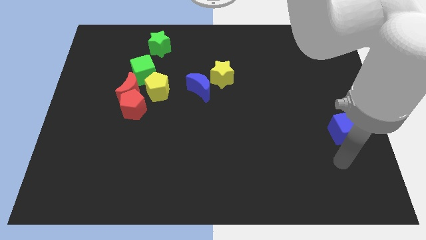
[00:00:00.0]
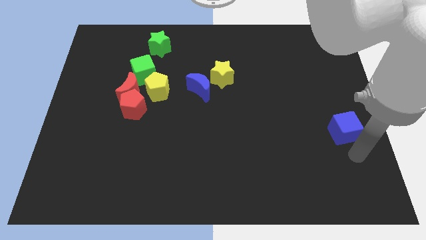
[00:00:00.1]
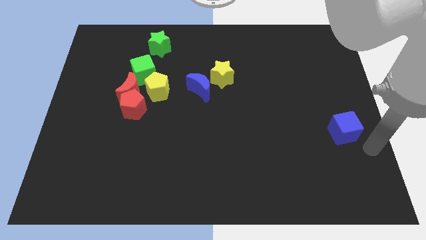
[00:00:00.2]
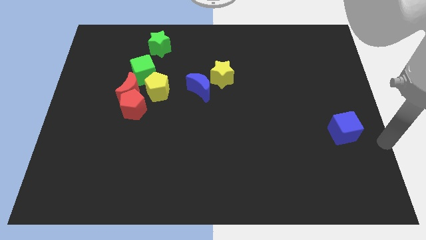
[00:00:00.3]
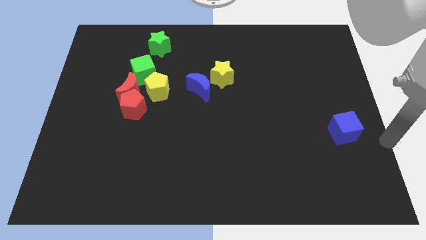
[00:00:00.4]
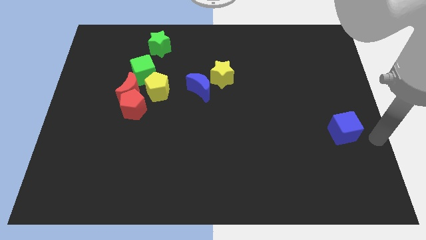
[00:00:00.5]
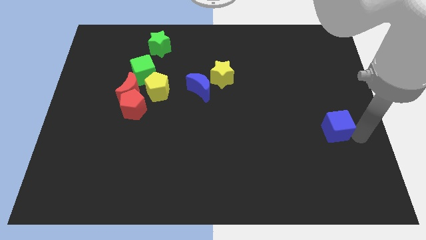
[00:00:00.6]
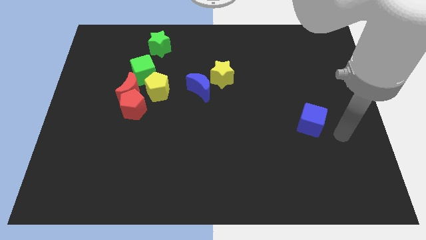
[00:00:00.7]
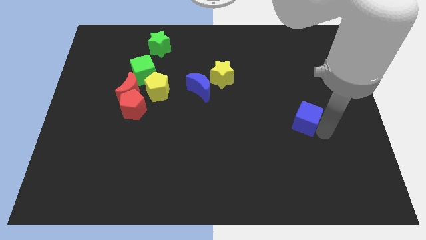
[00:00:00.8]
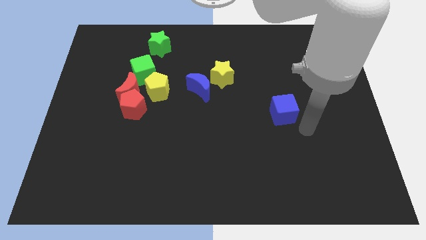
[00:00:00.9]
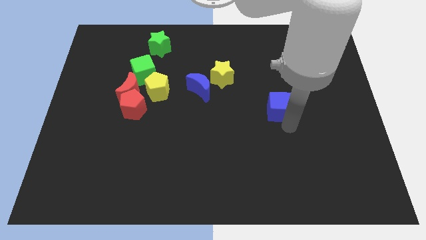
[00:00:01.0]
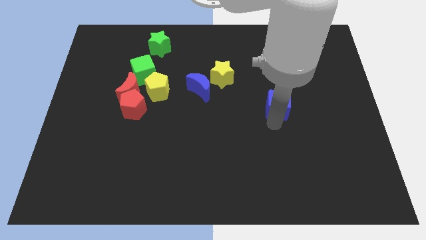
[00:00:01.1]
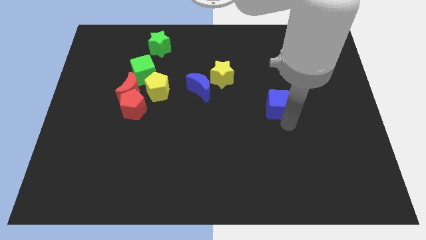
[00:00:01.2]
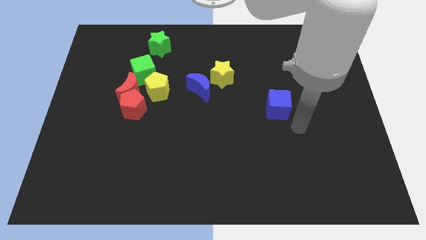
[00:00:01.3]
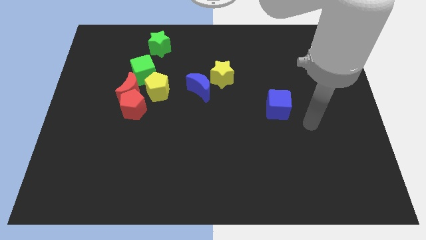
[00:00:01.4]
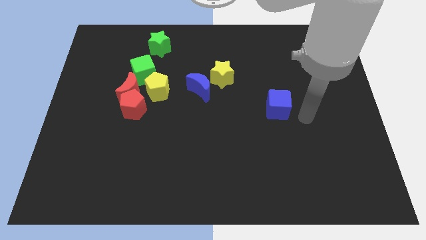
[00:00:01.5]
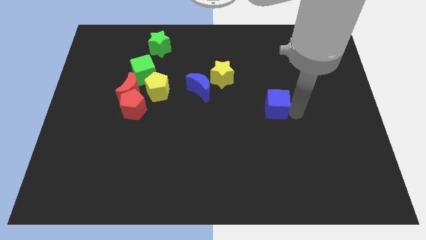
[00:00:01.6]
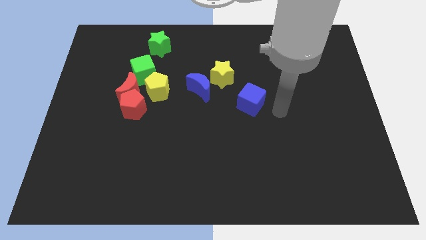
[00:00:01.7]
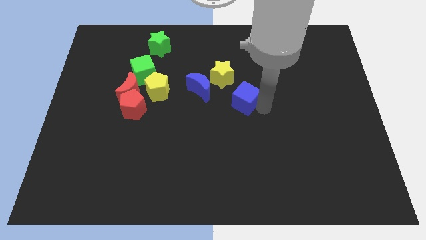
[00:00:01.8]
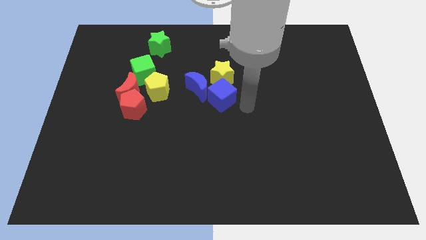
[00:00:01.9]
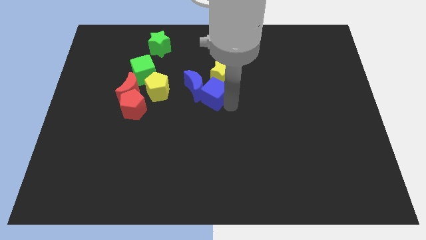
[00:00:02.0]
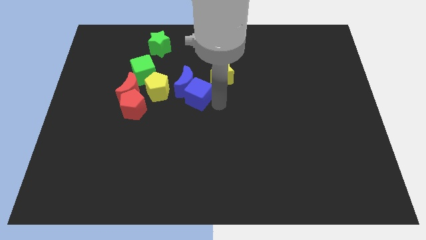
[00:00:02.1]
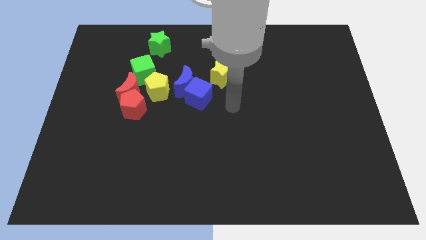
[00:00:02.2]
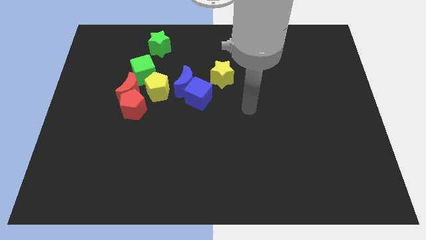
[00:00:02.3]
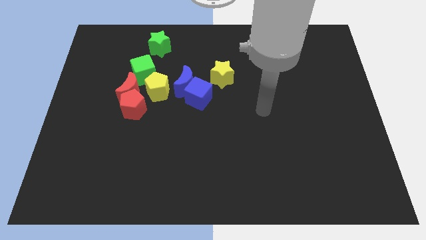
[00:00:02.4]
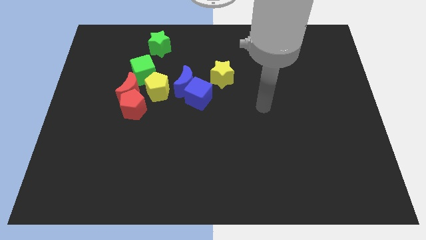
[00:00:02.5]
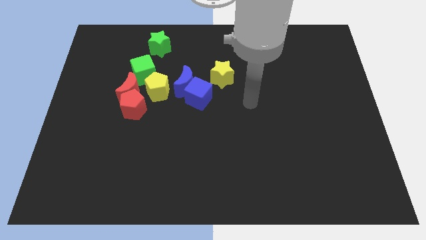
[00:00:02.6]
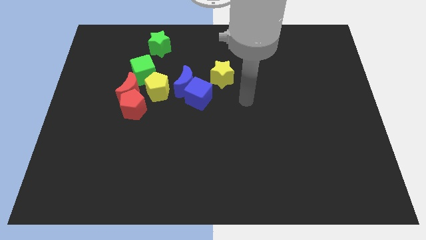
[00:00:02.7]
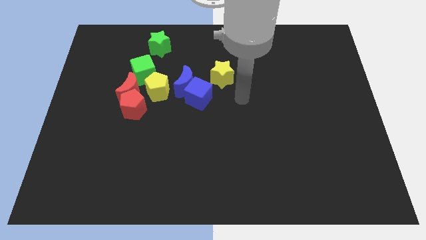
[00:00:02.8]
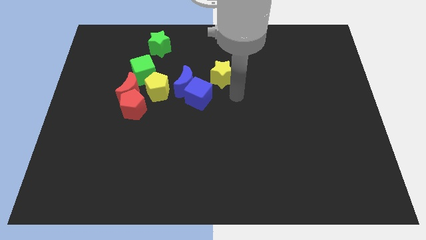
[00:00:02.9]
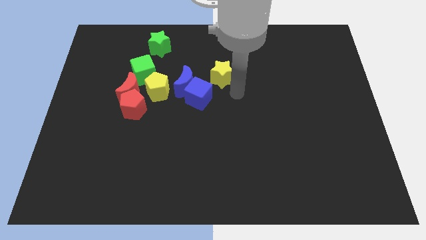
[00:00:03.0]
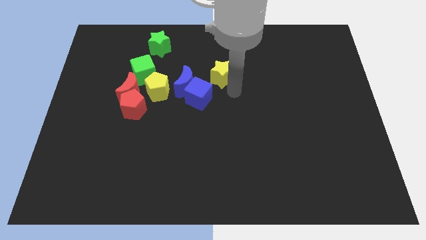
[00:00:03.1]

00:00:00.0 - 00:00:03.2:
push the blue cube into the blue moon

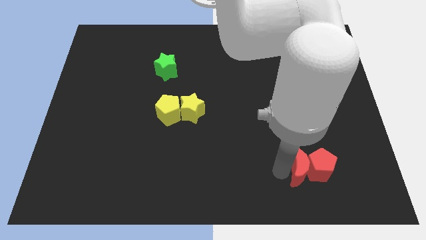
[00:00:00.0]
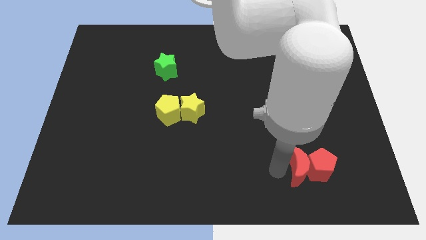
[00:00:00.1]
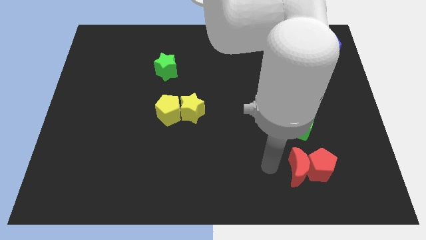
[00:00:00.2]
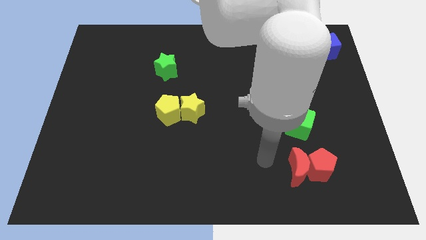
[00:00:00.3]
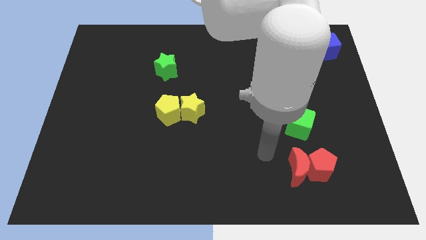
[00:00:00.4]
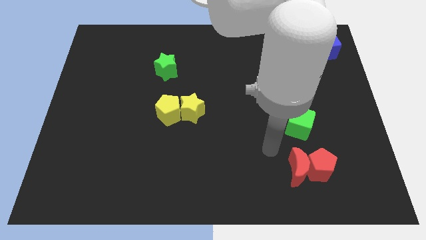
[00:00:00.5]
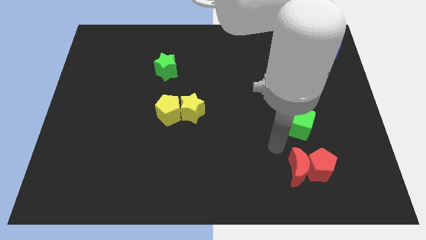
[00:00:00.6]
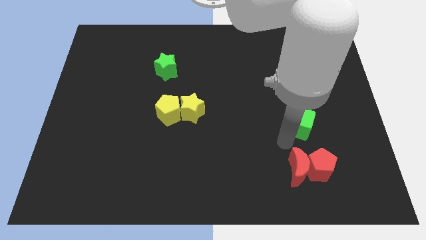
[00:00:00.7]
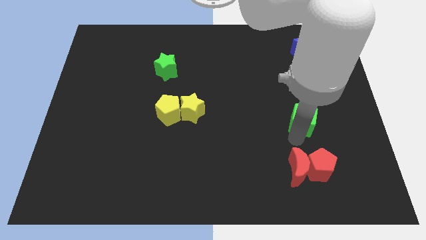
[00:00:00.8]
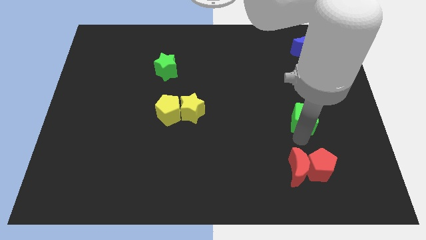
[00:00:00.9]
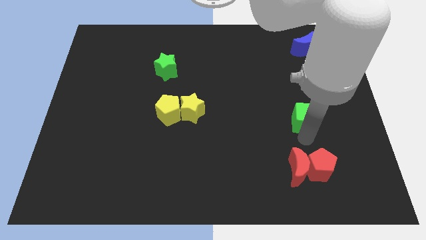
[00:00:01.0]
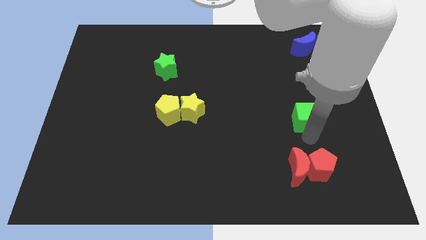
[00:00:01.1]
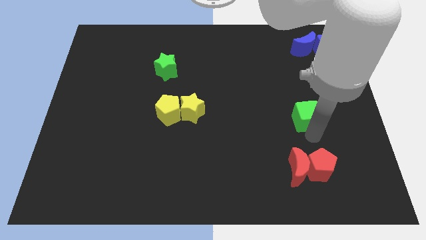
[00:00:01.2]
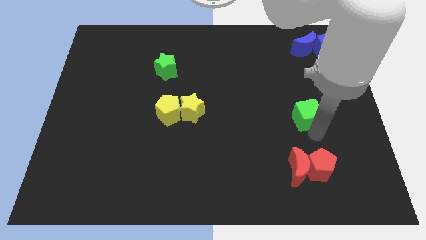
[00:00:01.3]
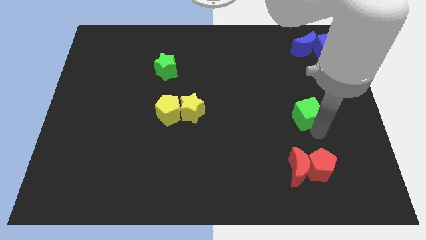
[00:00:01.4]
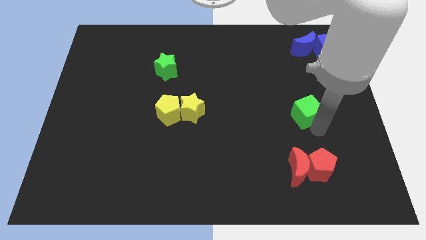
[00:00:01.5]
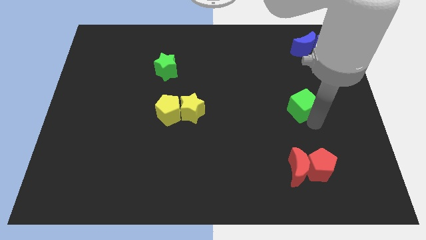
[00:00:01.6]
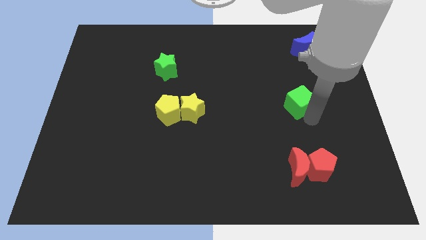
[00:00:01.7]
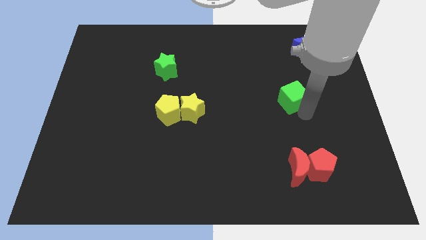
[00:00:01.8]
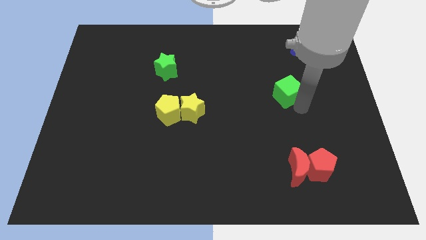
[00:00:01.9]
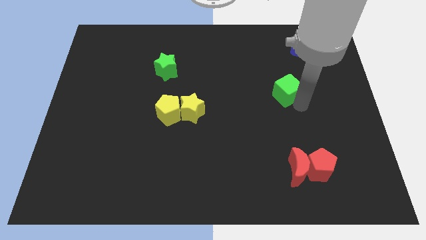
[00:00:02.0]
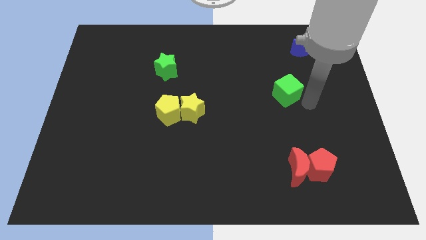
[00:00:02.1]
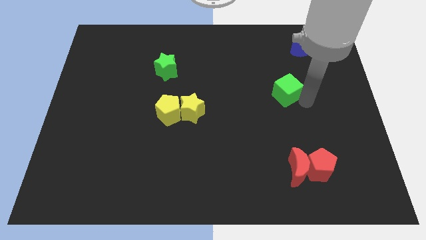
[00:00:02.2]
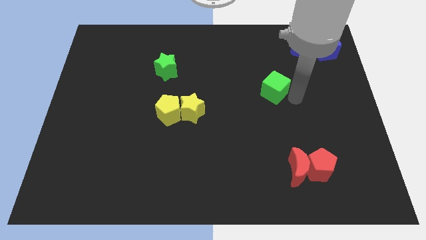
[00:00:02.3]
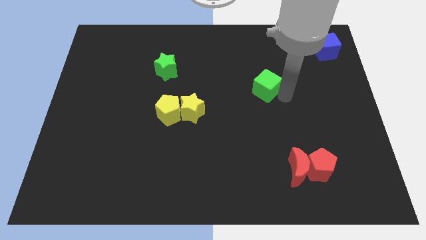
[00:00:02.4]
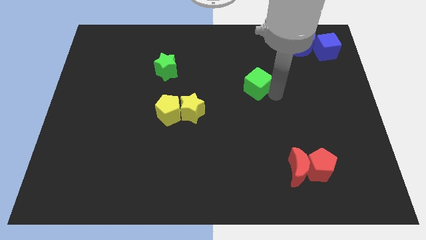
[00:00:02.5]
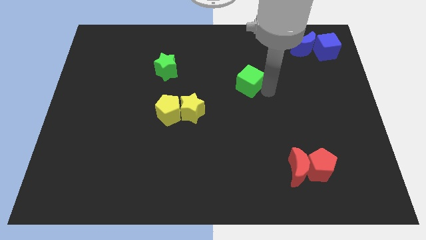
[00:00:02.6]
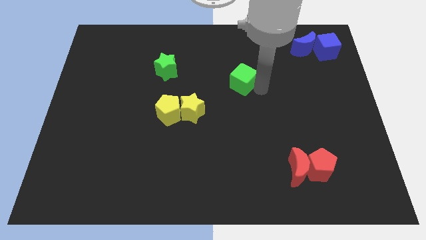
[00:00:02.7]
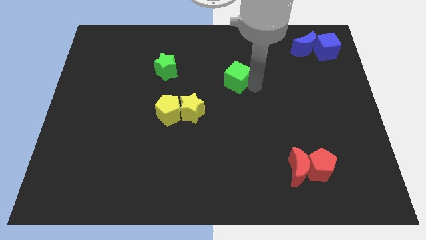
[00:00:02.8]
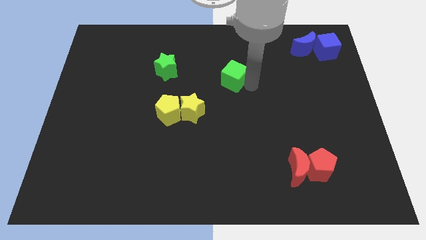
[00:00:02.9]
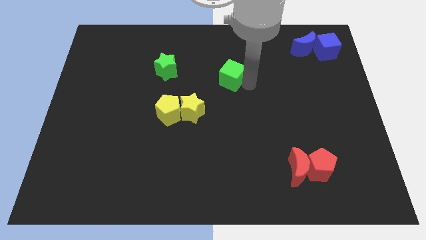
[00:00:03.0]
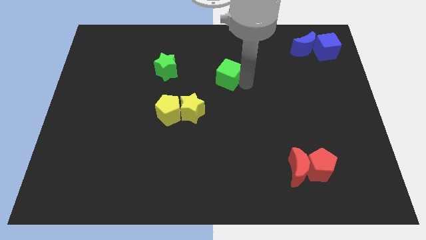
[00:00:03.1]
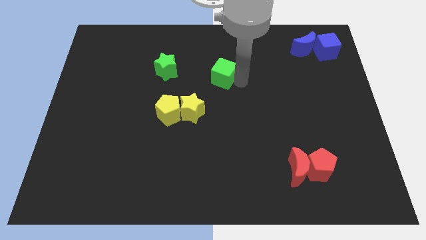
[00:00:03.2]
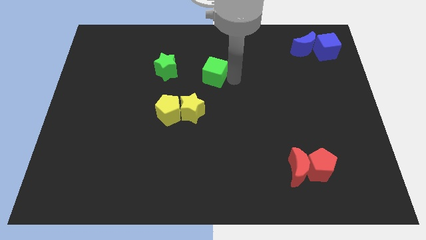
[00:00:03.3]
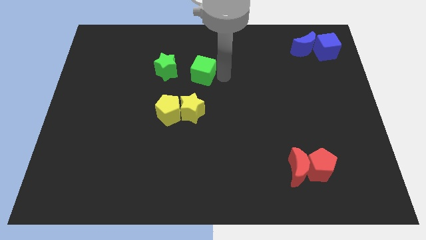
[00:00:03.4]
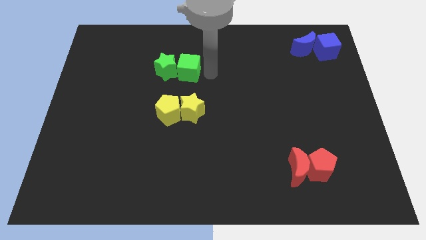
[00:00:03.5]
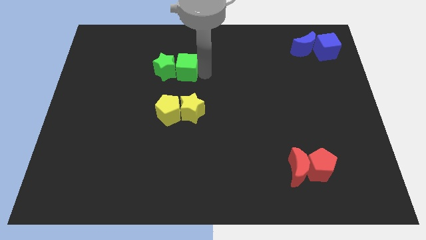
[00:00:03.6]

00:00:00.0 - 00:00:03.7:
push the green cube to the right of the green star

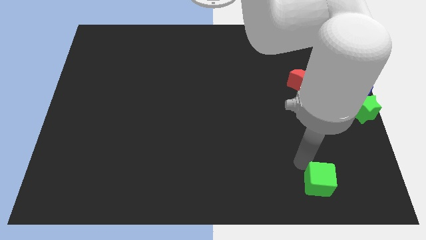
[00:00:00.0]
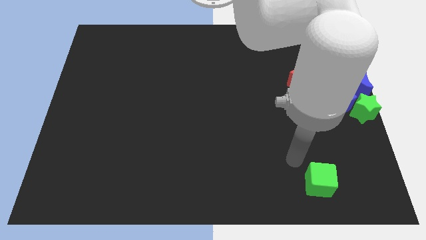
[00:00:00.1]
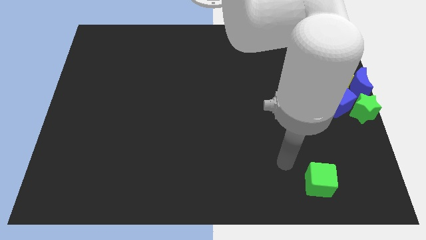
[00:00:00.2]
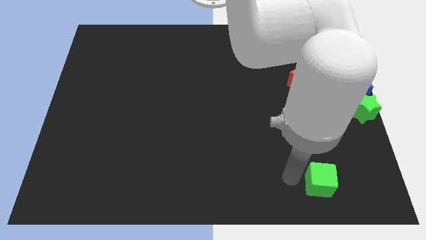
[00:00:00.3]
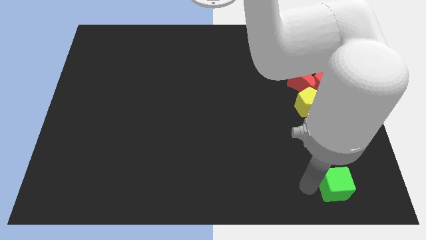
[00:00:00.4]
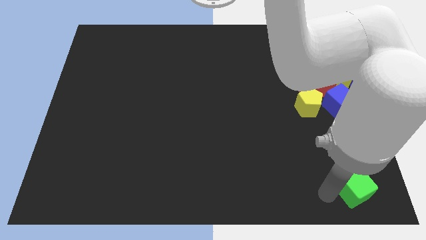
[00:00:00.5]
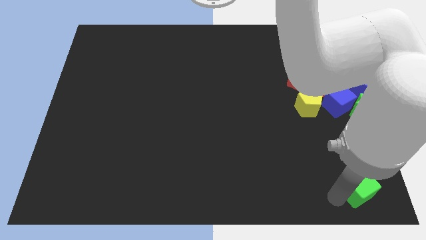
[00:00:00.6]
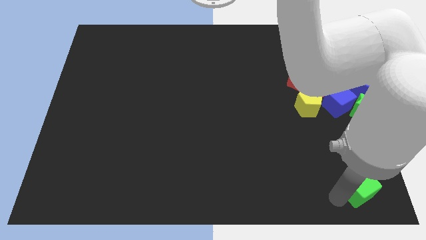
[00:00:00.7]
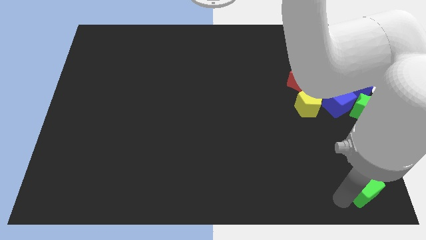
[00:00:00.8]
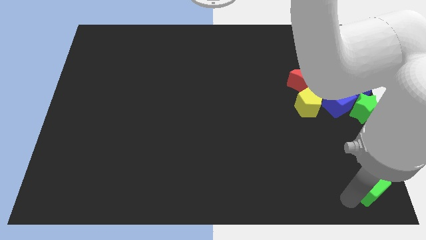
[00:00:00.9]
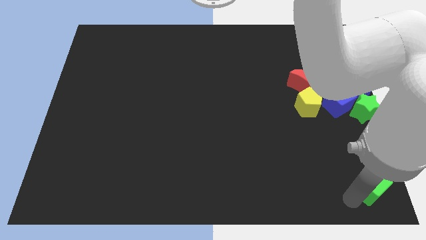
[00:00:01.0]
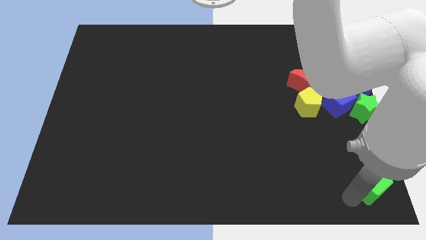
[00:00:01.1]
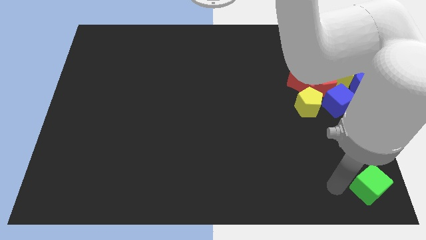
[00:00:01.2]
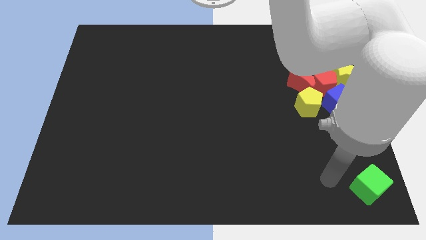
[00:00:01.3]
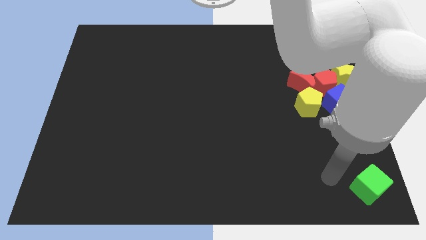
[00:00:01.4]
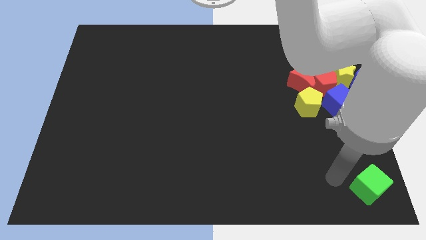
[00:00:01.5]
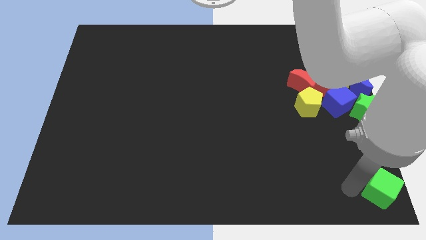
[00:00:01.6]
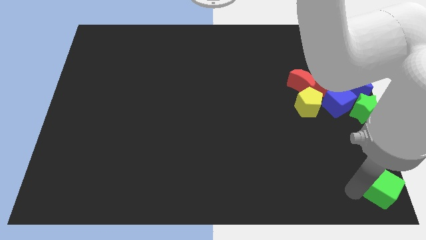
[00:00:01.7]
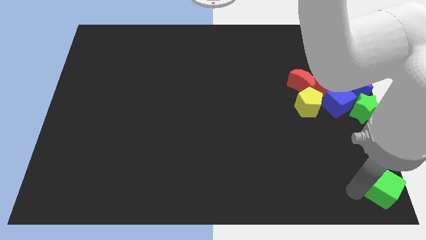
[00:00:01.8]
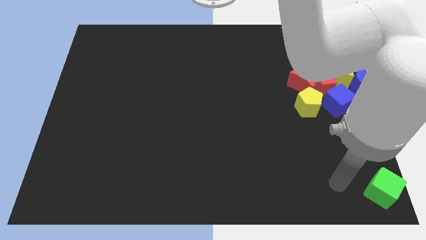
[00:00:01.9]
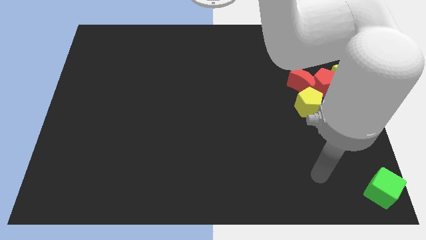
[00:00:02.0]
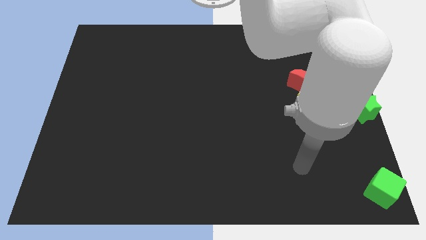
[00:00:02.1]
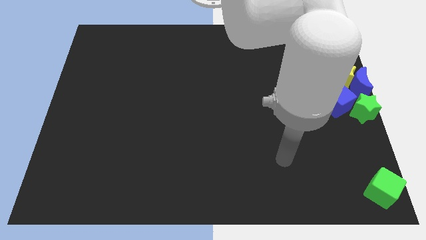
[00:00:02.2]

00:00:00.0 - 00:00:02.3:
place the green cube to the bottom right of the board
